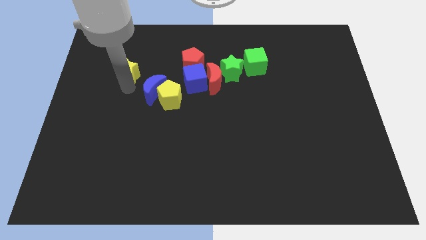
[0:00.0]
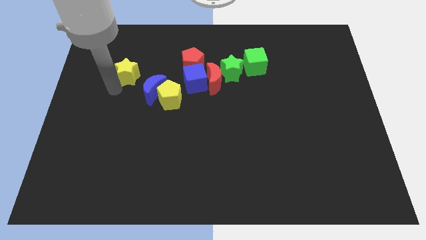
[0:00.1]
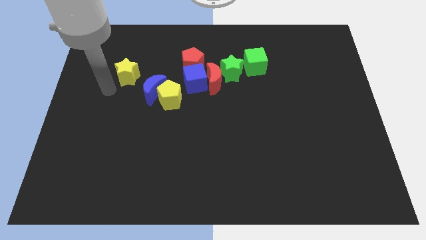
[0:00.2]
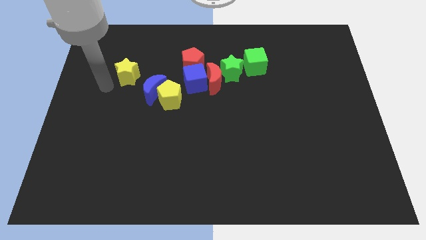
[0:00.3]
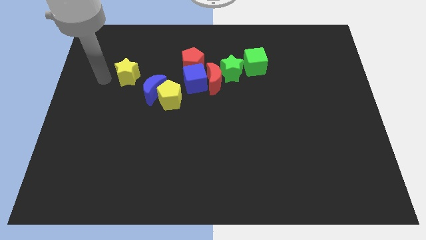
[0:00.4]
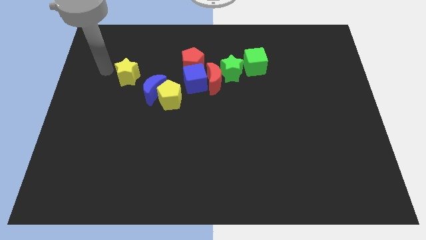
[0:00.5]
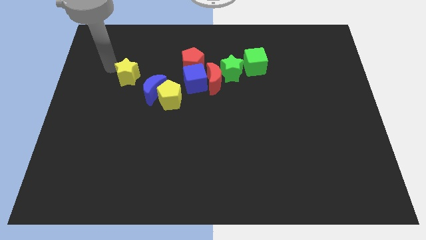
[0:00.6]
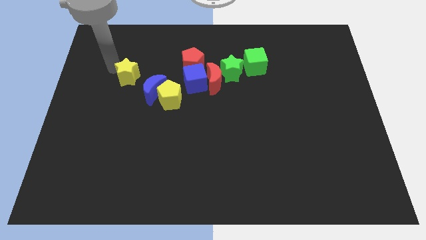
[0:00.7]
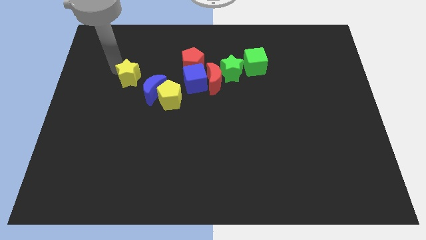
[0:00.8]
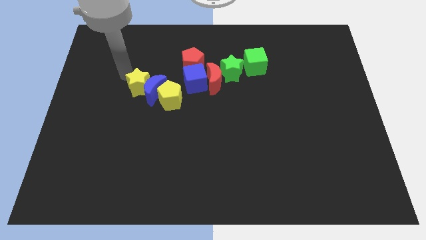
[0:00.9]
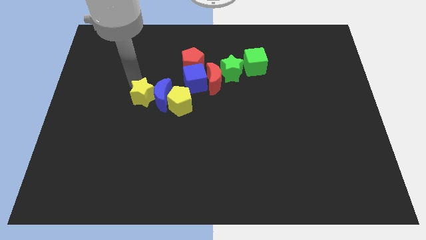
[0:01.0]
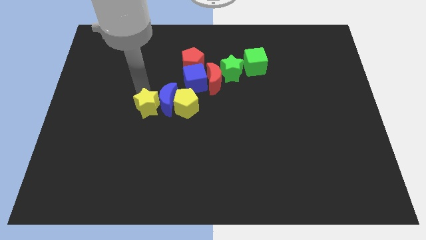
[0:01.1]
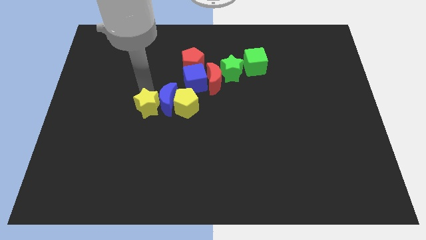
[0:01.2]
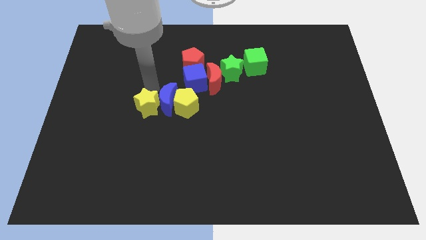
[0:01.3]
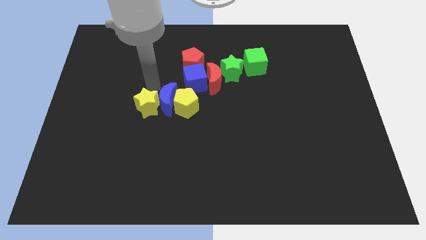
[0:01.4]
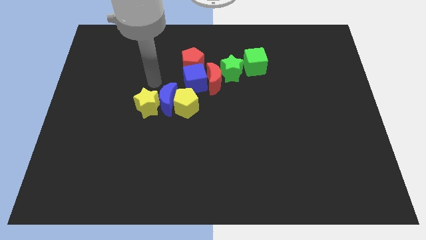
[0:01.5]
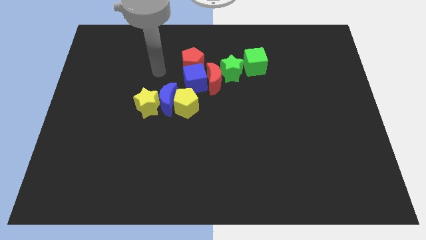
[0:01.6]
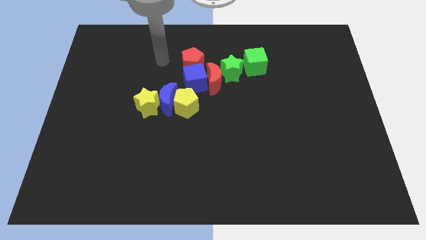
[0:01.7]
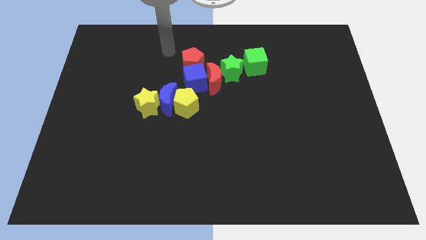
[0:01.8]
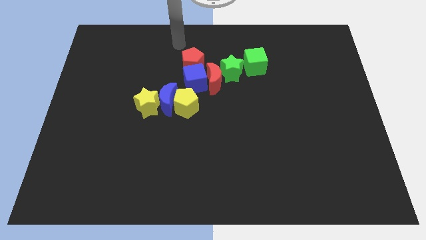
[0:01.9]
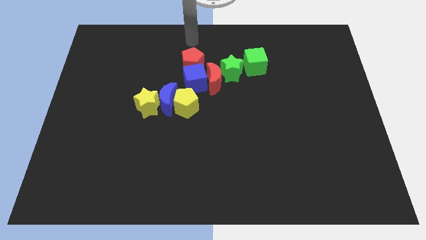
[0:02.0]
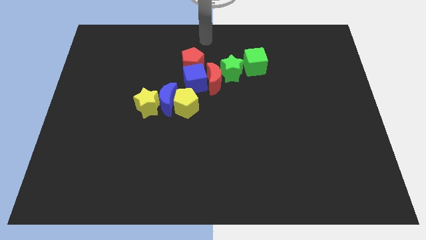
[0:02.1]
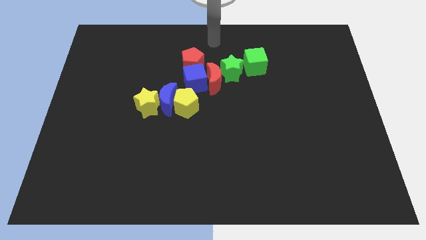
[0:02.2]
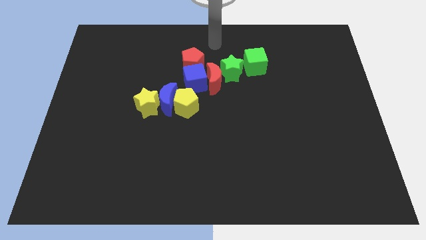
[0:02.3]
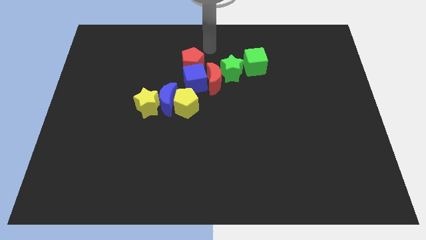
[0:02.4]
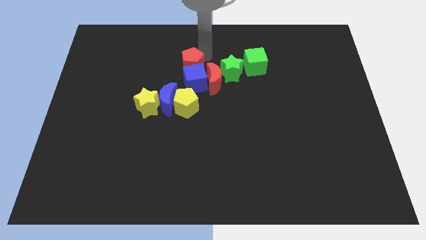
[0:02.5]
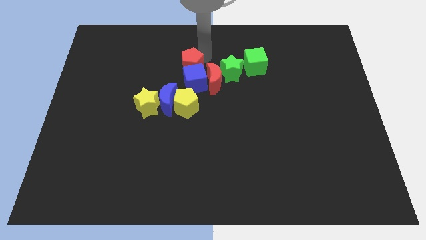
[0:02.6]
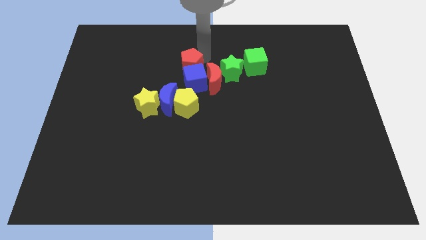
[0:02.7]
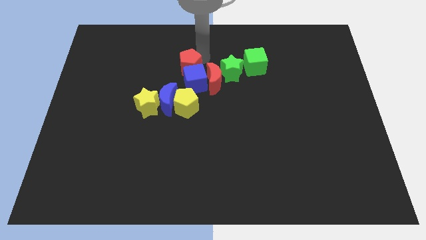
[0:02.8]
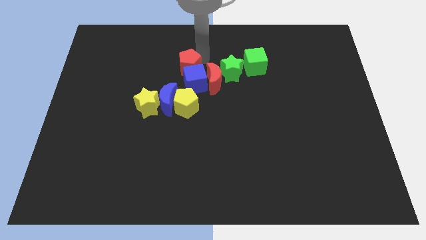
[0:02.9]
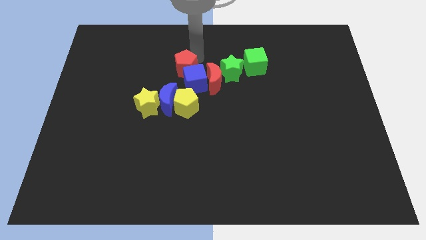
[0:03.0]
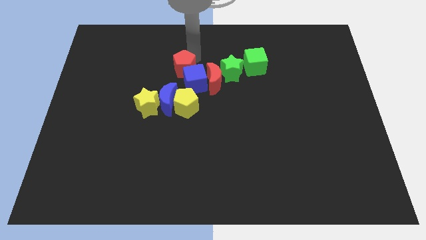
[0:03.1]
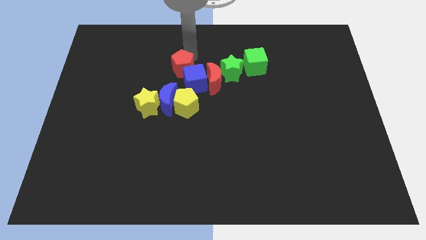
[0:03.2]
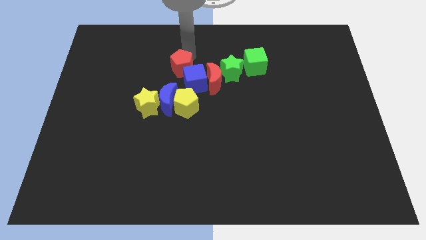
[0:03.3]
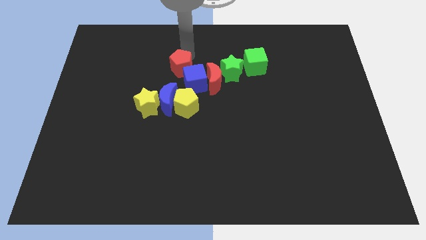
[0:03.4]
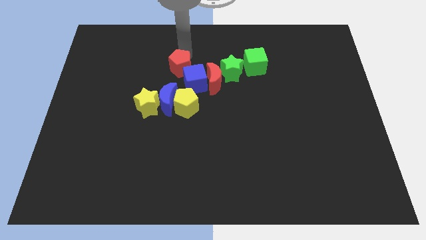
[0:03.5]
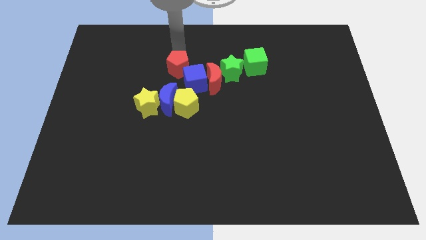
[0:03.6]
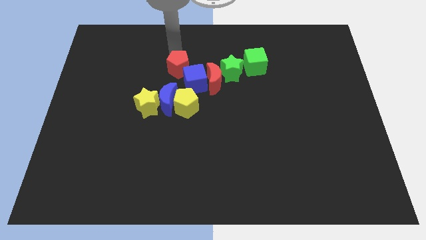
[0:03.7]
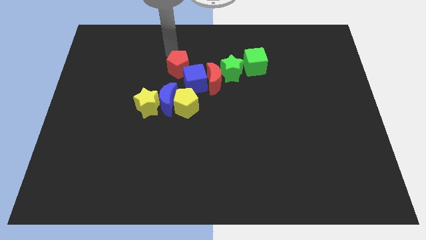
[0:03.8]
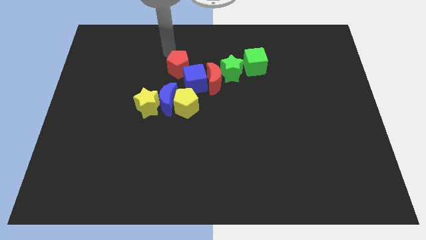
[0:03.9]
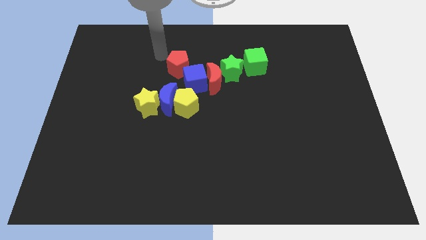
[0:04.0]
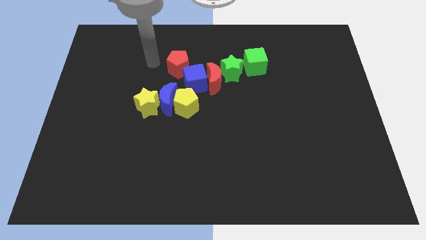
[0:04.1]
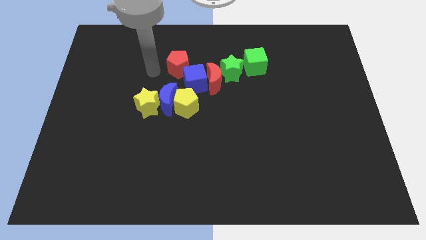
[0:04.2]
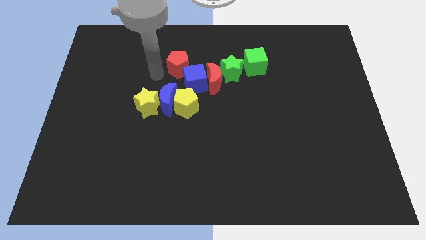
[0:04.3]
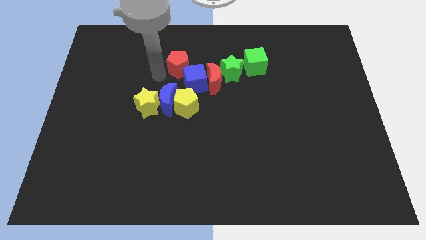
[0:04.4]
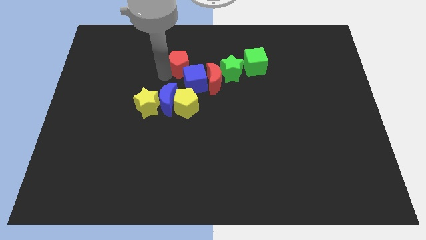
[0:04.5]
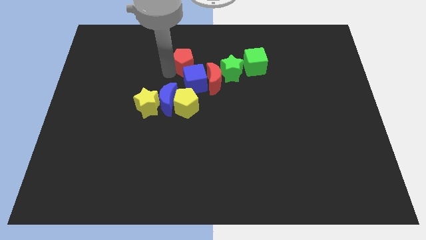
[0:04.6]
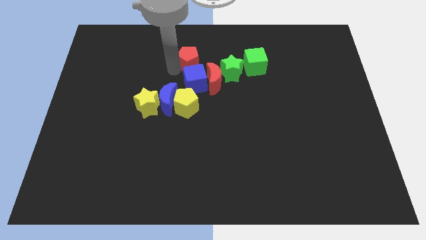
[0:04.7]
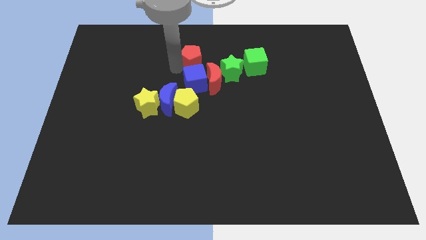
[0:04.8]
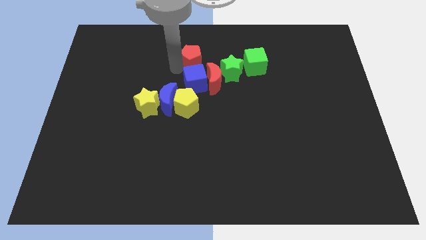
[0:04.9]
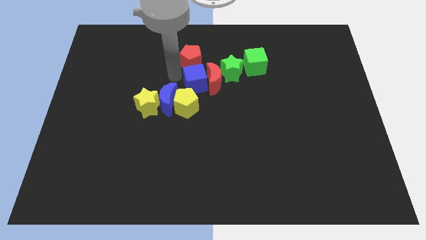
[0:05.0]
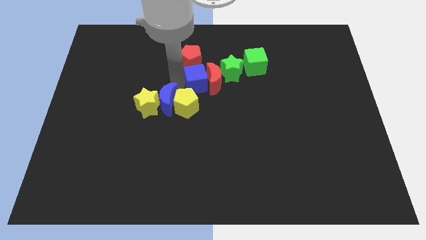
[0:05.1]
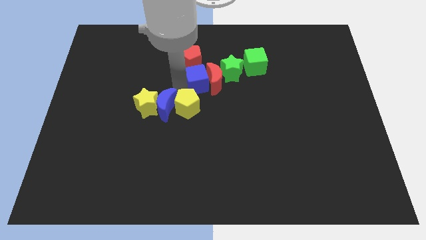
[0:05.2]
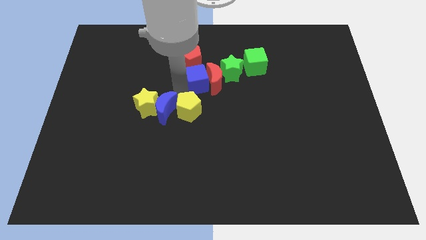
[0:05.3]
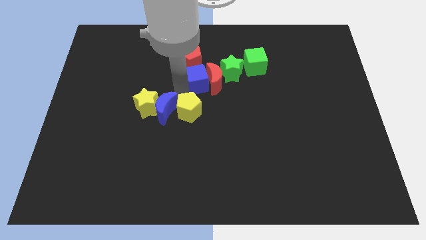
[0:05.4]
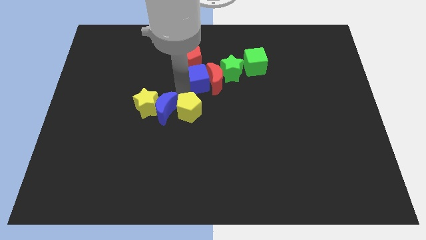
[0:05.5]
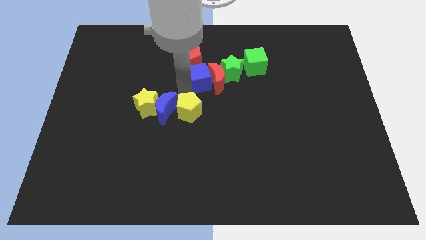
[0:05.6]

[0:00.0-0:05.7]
move the yellow pentagon slightly to the down

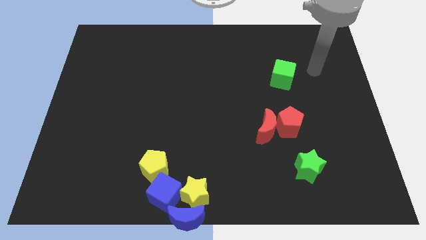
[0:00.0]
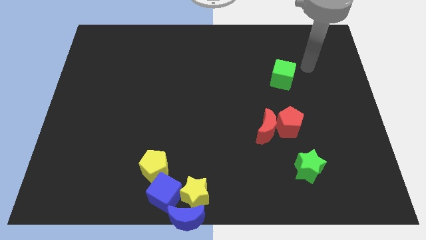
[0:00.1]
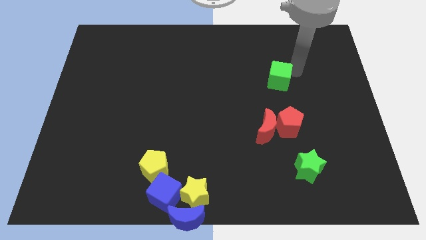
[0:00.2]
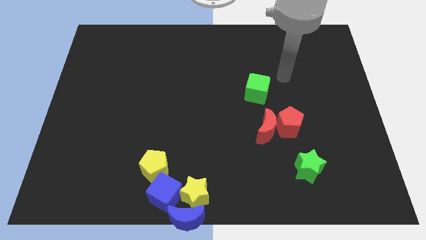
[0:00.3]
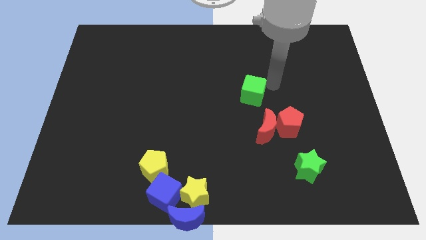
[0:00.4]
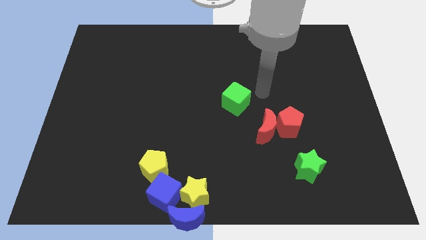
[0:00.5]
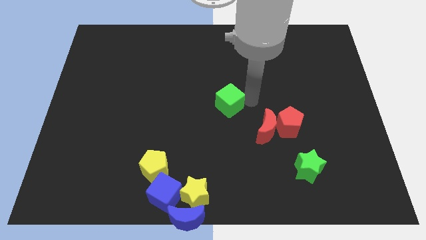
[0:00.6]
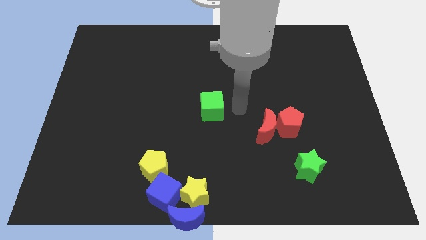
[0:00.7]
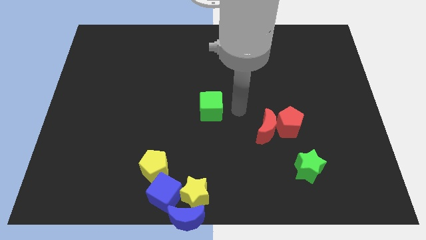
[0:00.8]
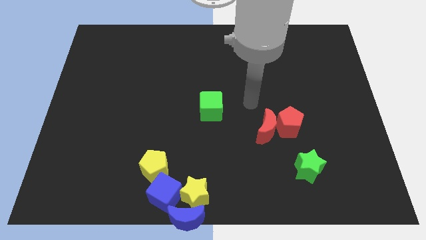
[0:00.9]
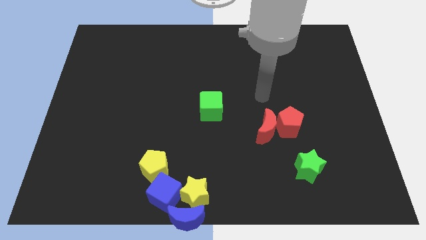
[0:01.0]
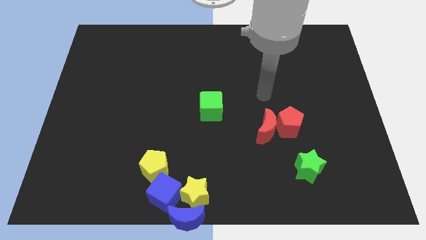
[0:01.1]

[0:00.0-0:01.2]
place the green cube diagonally top right to the yellow pentagon

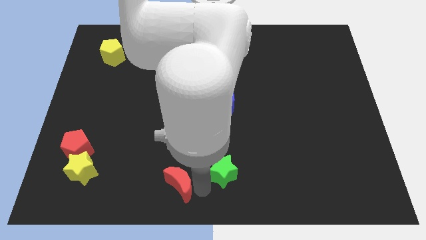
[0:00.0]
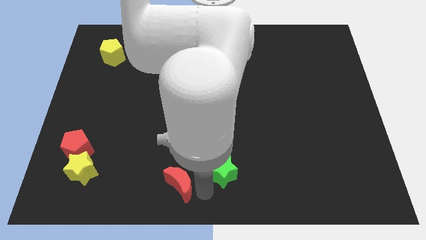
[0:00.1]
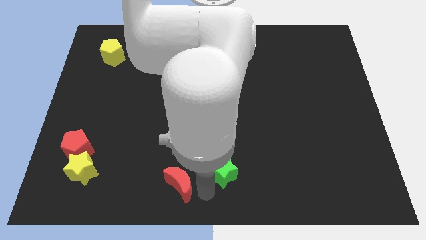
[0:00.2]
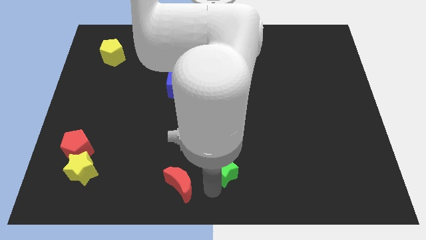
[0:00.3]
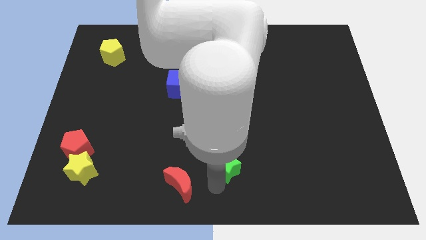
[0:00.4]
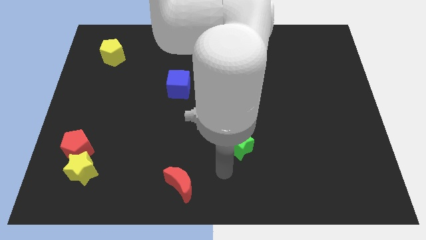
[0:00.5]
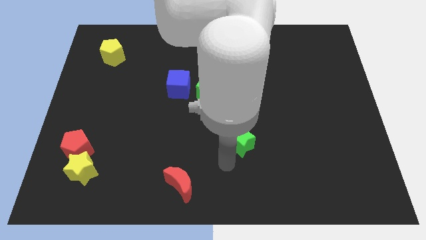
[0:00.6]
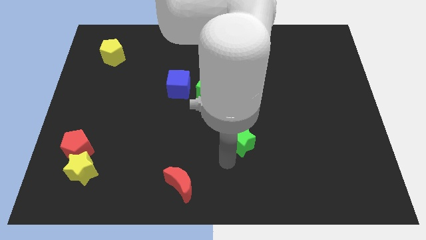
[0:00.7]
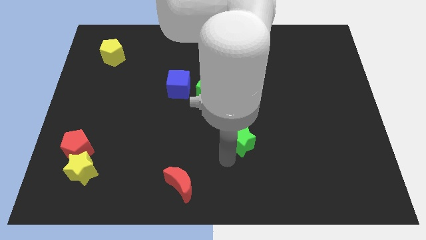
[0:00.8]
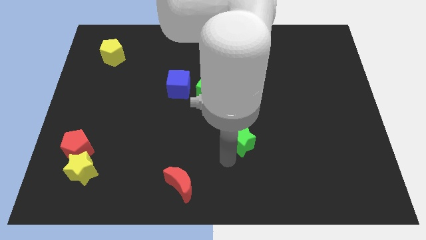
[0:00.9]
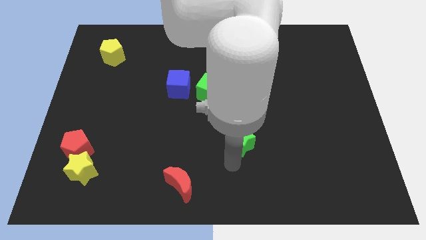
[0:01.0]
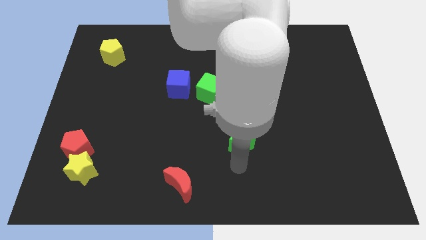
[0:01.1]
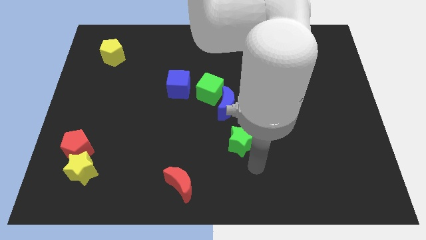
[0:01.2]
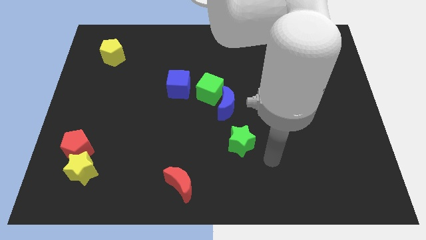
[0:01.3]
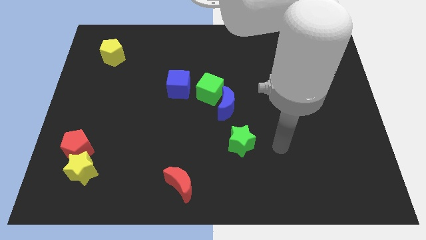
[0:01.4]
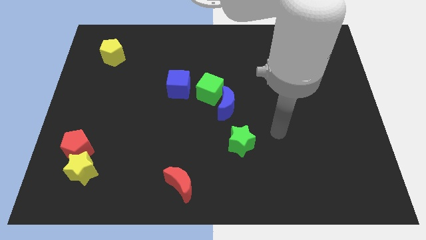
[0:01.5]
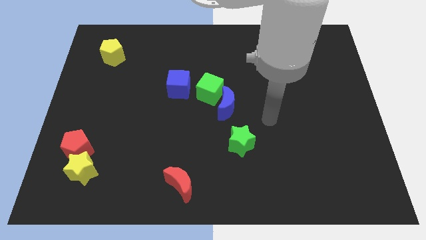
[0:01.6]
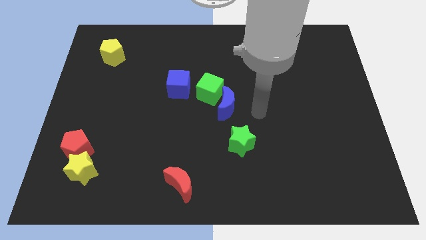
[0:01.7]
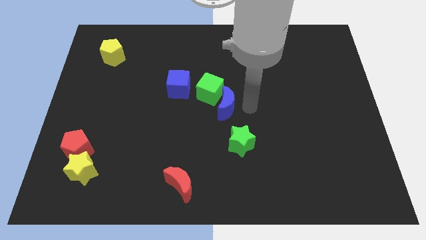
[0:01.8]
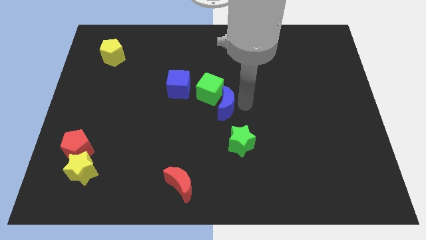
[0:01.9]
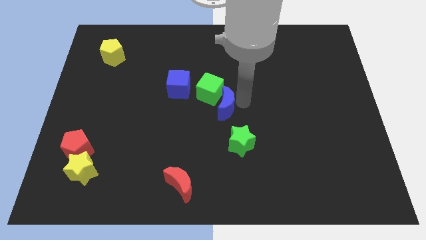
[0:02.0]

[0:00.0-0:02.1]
move the green star diagonally to the blue moon
